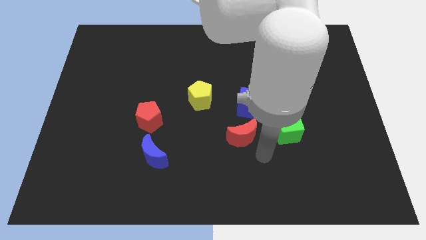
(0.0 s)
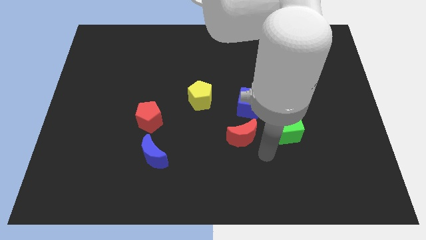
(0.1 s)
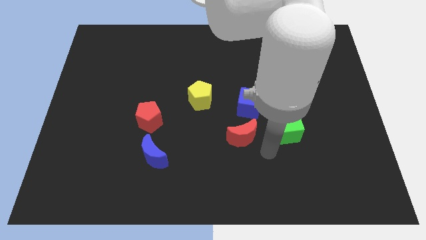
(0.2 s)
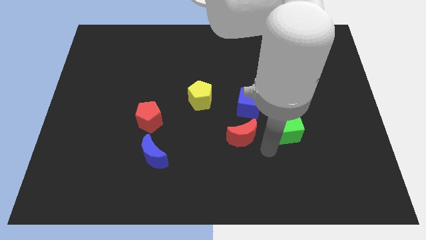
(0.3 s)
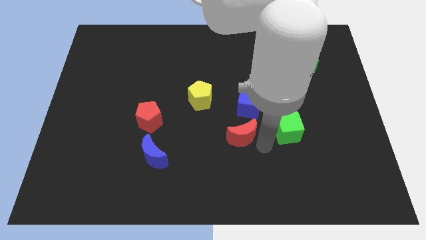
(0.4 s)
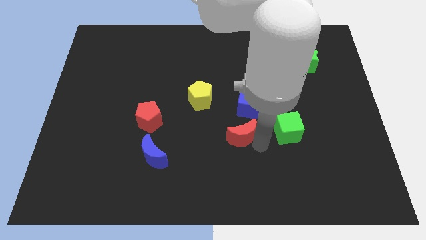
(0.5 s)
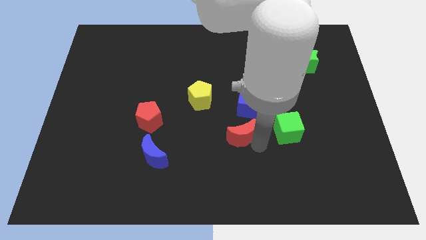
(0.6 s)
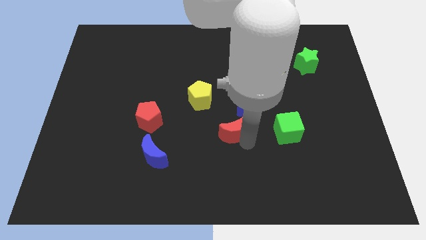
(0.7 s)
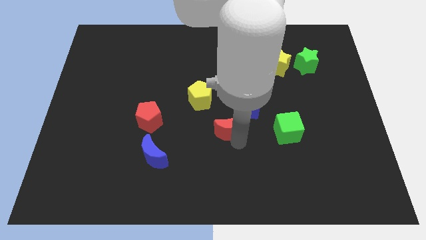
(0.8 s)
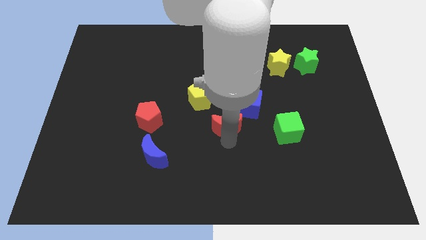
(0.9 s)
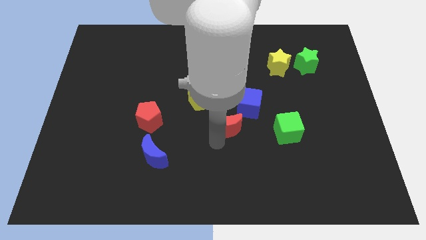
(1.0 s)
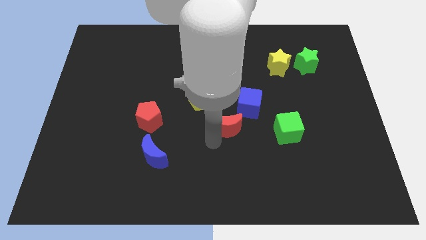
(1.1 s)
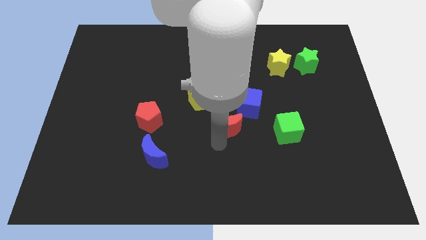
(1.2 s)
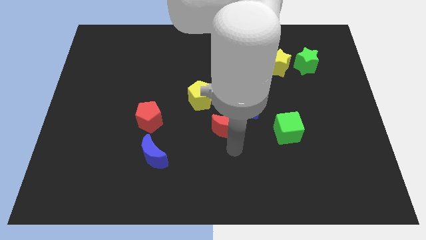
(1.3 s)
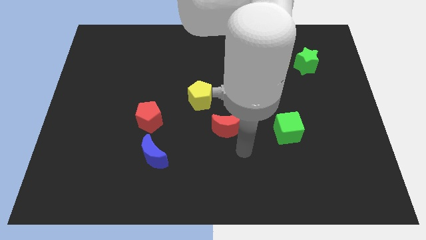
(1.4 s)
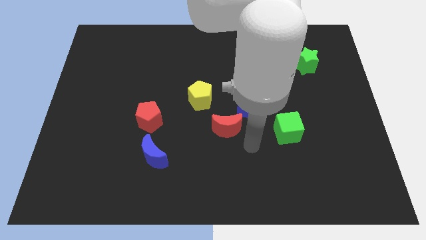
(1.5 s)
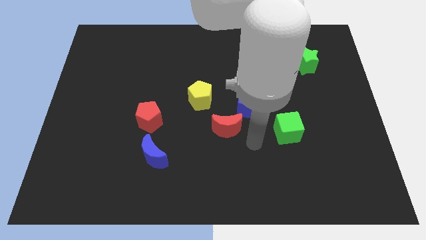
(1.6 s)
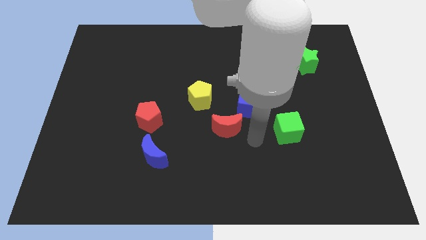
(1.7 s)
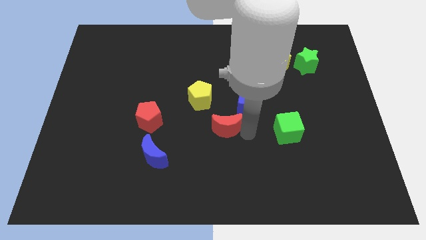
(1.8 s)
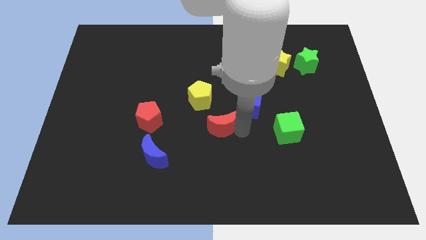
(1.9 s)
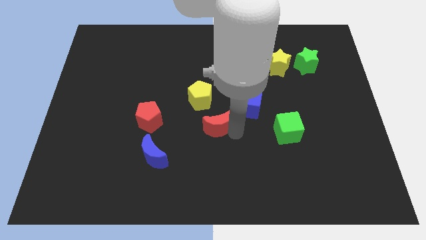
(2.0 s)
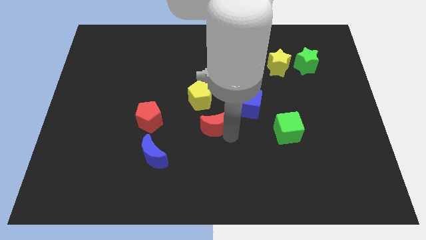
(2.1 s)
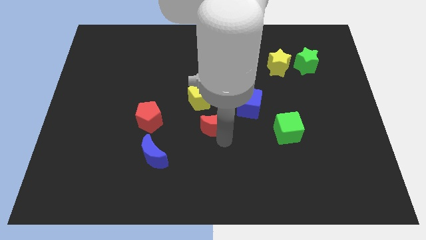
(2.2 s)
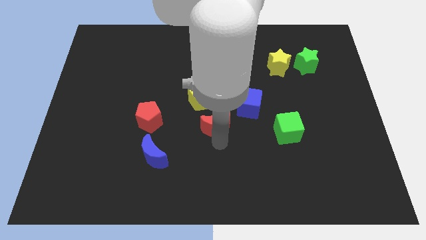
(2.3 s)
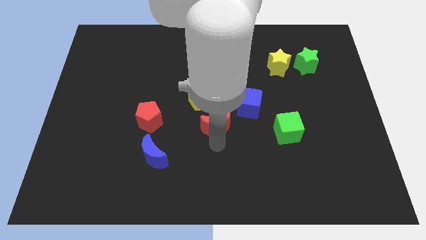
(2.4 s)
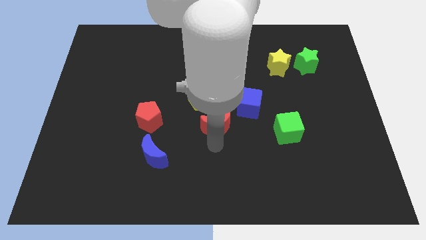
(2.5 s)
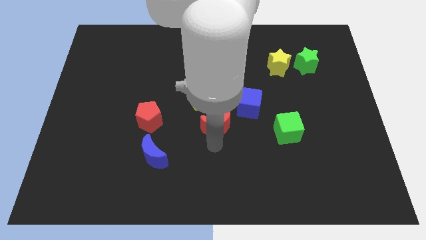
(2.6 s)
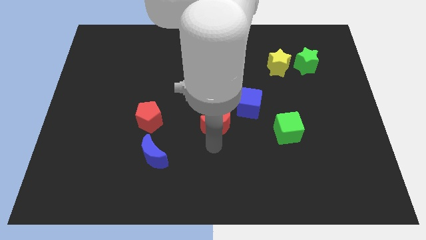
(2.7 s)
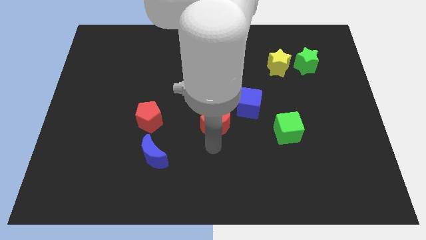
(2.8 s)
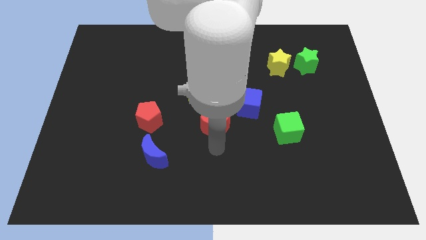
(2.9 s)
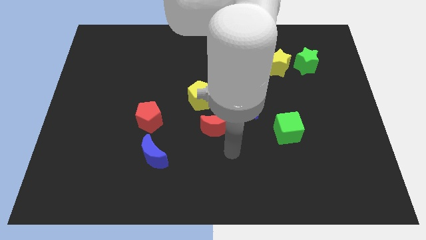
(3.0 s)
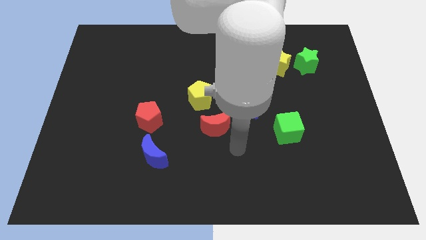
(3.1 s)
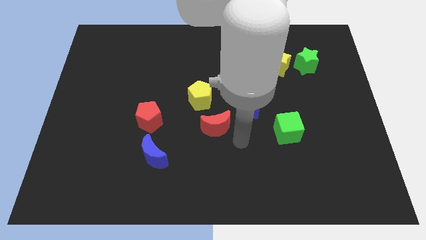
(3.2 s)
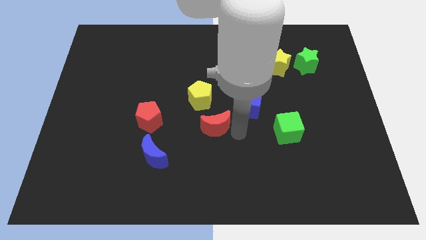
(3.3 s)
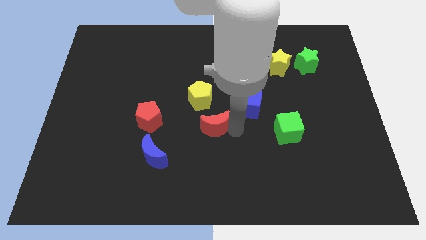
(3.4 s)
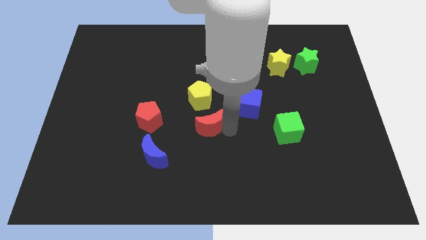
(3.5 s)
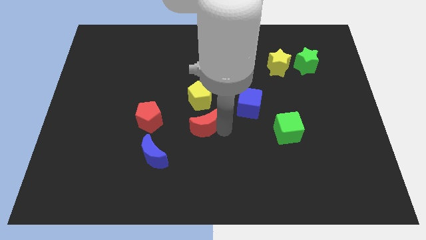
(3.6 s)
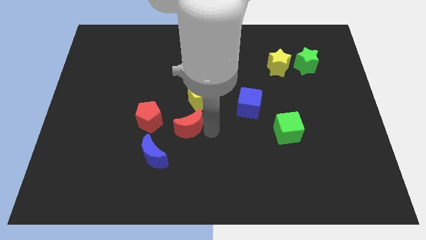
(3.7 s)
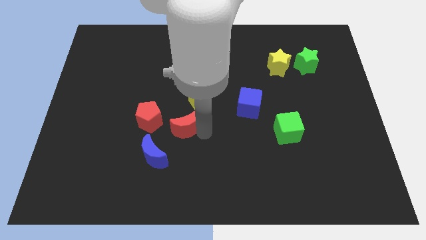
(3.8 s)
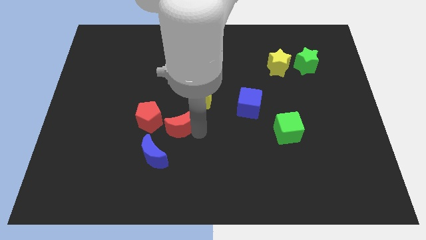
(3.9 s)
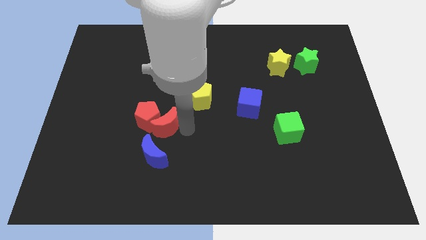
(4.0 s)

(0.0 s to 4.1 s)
push the red moon into the red pentagon

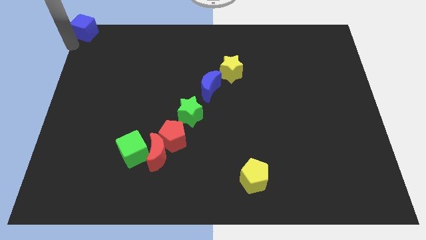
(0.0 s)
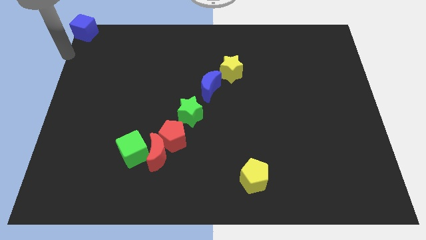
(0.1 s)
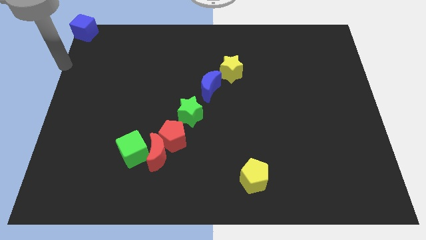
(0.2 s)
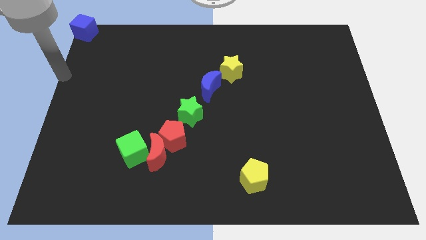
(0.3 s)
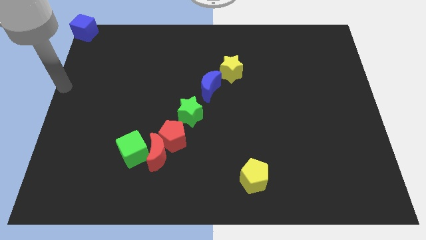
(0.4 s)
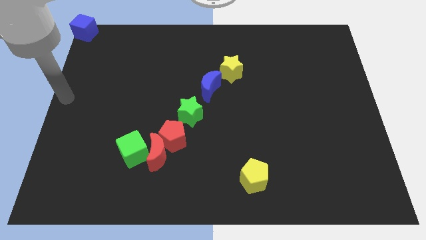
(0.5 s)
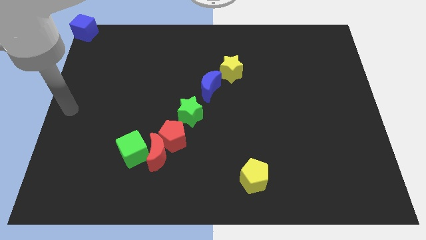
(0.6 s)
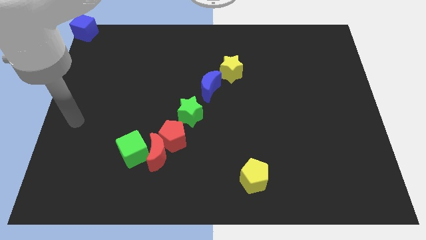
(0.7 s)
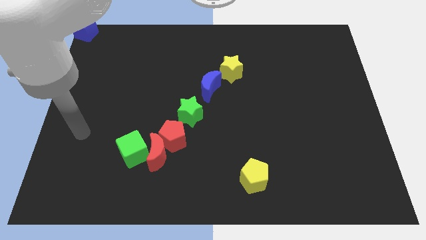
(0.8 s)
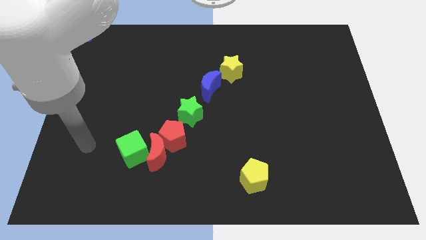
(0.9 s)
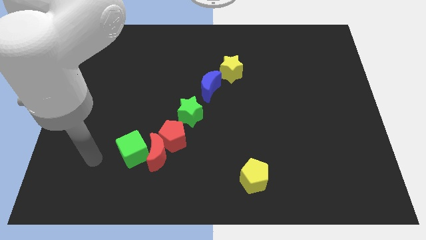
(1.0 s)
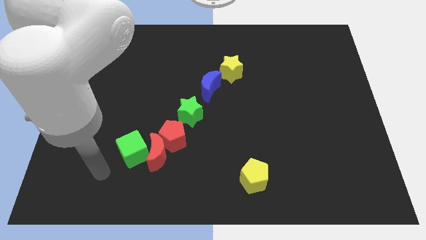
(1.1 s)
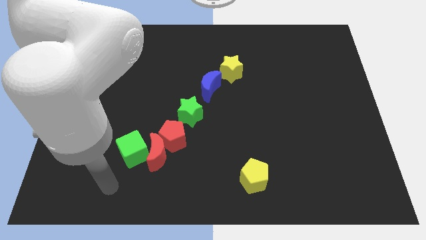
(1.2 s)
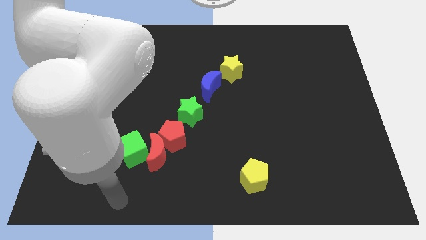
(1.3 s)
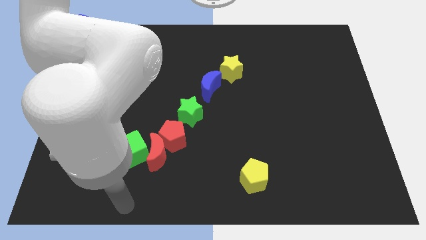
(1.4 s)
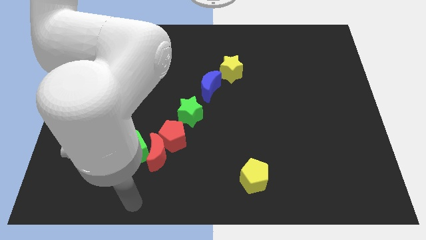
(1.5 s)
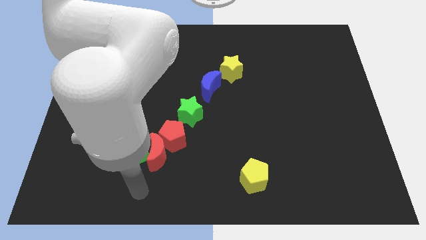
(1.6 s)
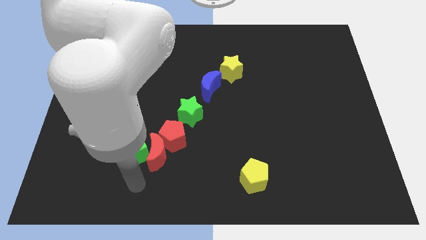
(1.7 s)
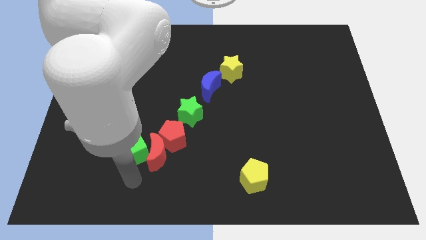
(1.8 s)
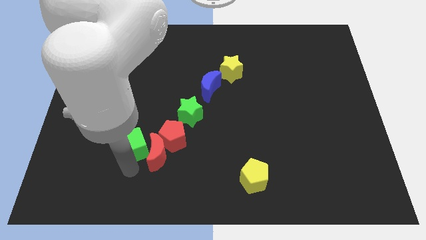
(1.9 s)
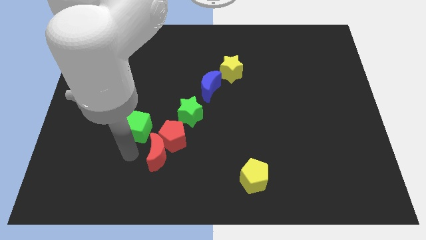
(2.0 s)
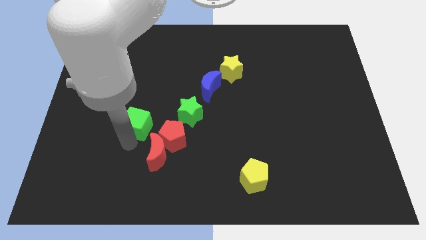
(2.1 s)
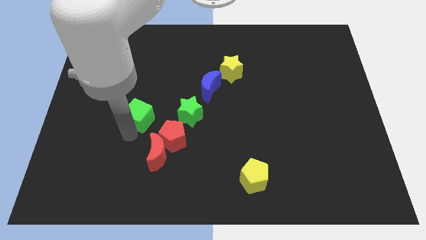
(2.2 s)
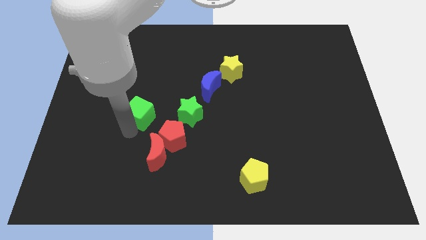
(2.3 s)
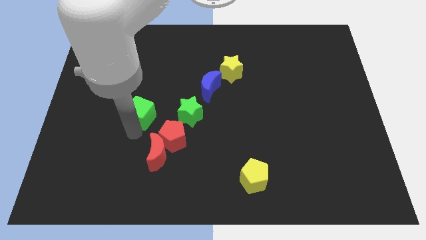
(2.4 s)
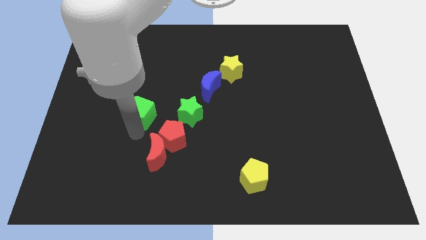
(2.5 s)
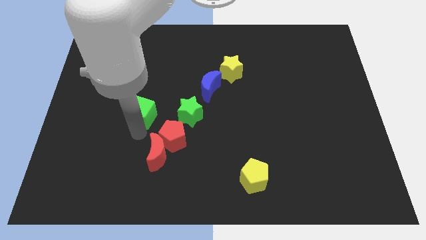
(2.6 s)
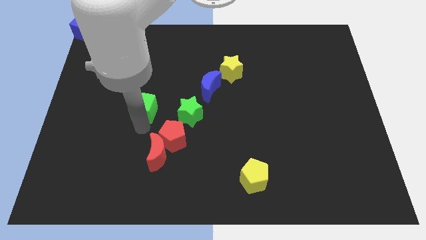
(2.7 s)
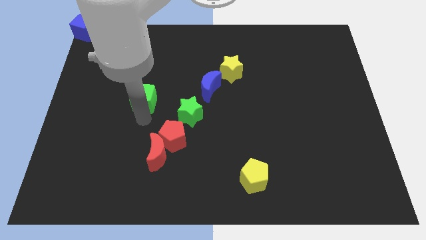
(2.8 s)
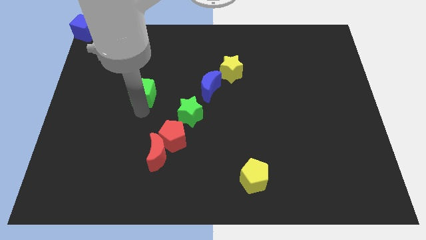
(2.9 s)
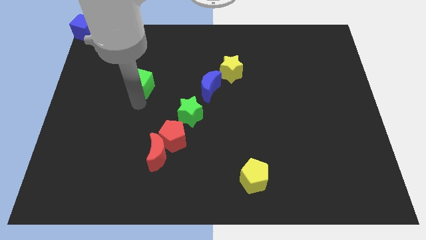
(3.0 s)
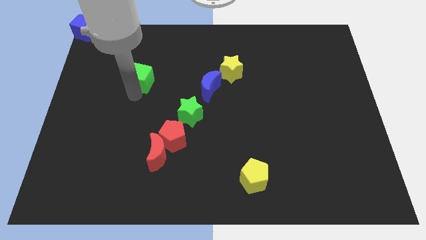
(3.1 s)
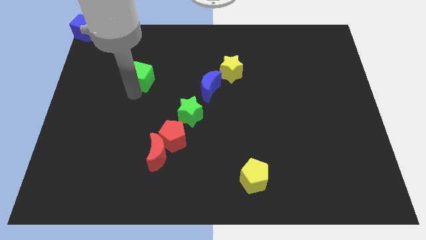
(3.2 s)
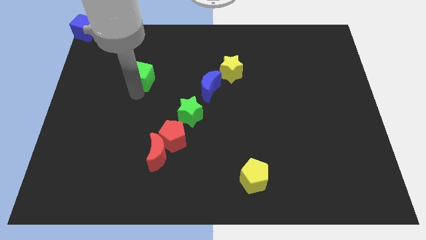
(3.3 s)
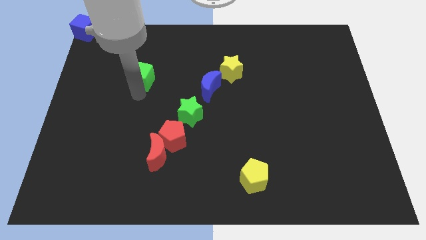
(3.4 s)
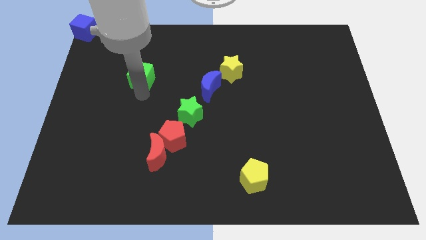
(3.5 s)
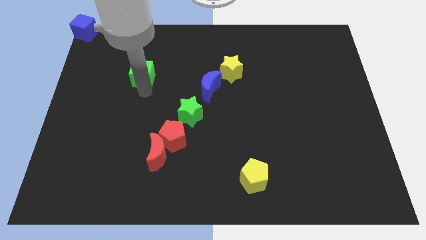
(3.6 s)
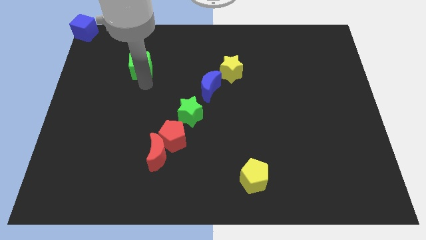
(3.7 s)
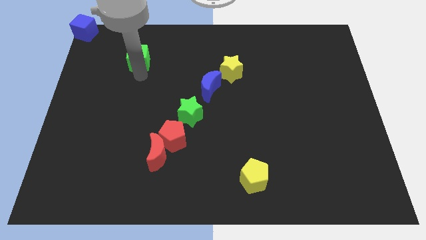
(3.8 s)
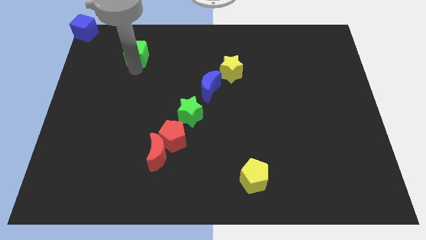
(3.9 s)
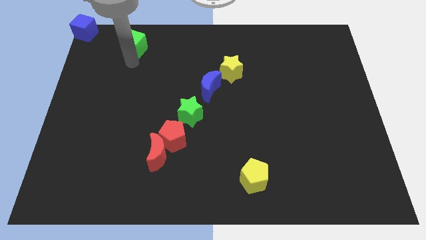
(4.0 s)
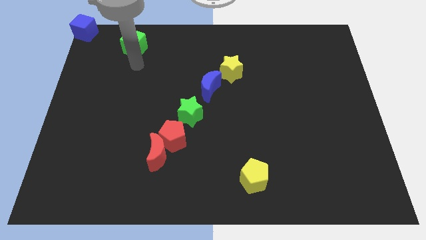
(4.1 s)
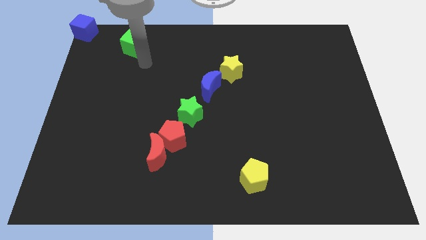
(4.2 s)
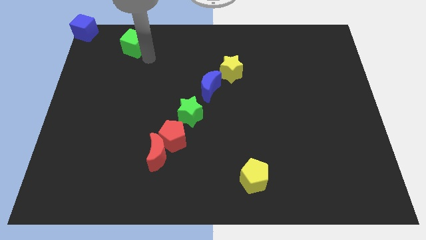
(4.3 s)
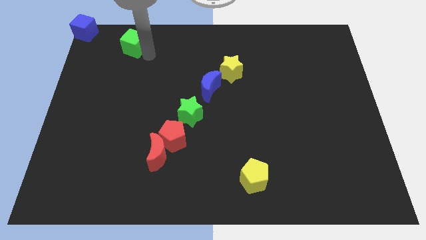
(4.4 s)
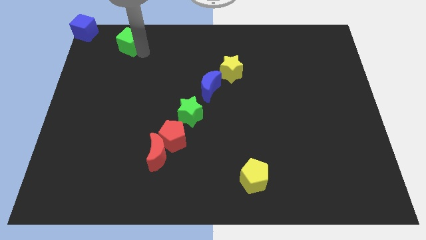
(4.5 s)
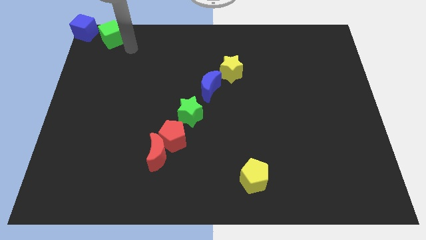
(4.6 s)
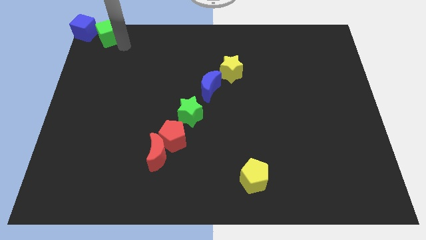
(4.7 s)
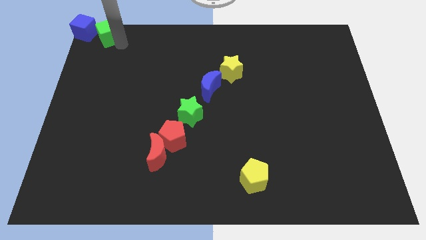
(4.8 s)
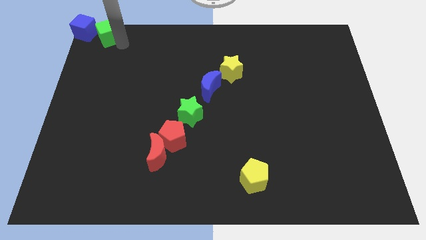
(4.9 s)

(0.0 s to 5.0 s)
slide the green cube into the right side of the blue cube
